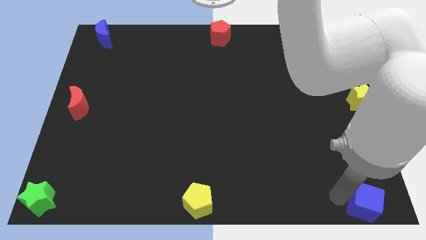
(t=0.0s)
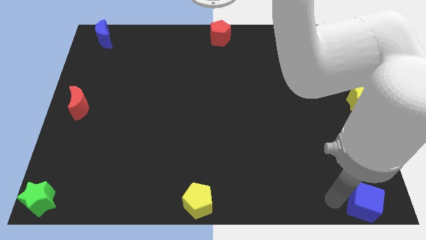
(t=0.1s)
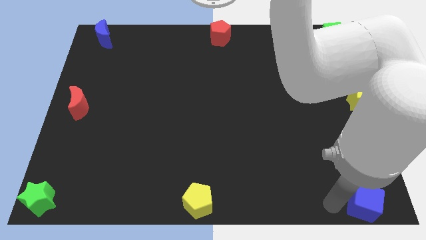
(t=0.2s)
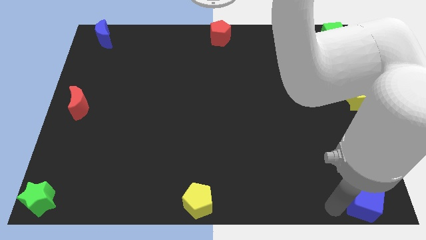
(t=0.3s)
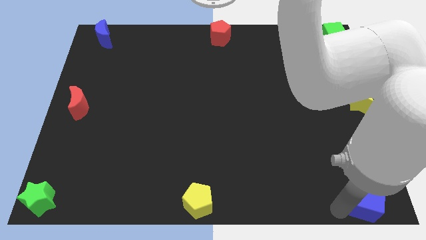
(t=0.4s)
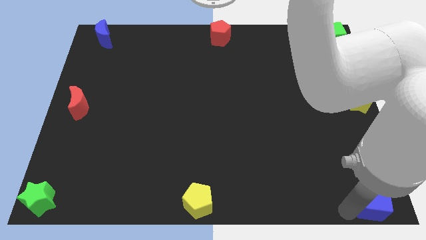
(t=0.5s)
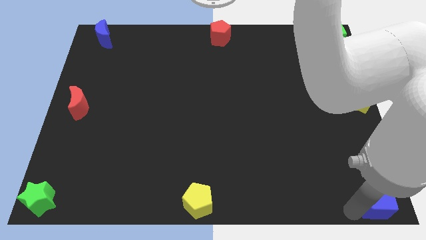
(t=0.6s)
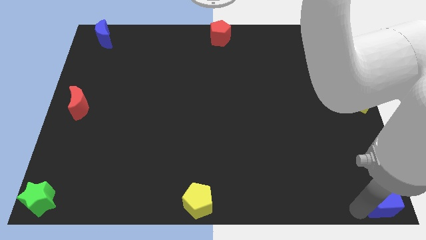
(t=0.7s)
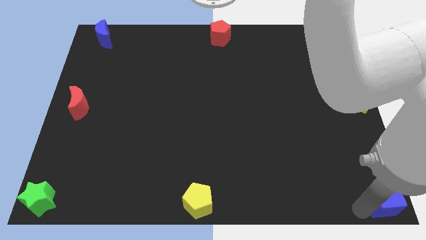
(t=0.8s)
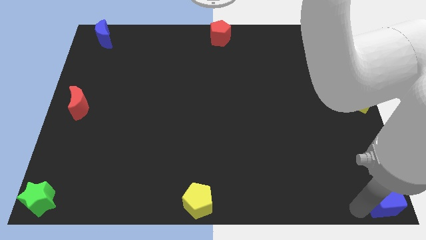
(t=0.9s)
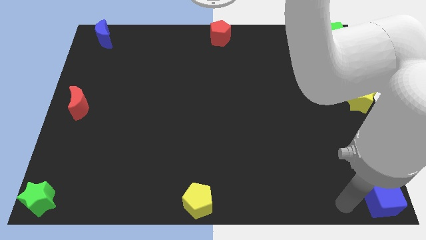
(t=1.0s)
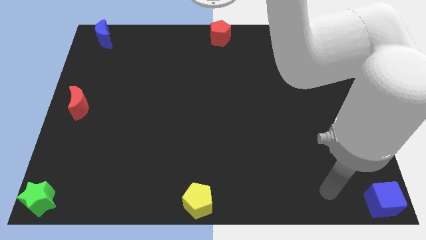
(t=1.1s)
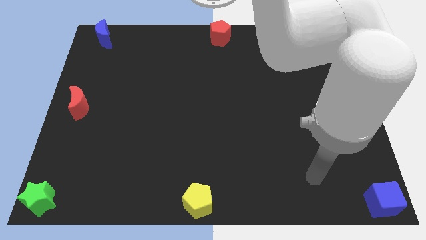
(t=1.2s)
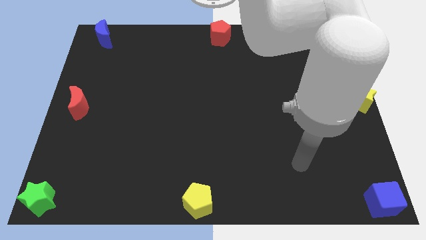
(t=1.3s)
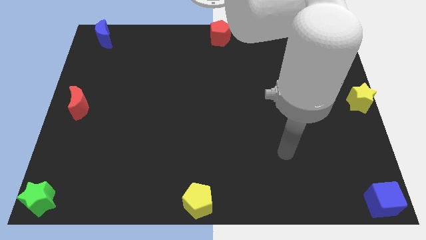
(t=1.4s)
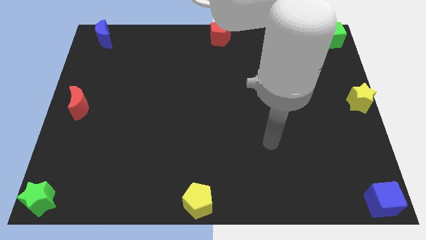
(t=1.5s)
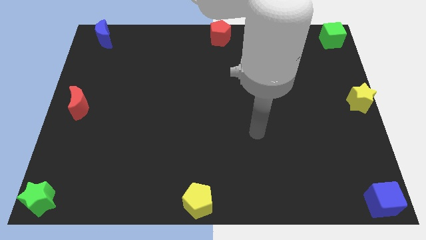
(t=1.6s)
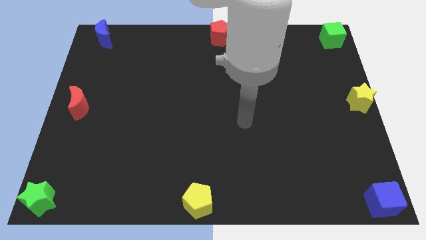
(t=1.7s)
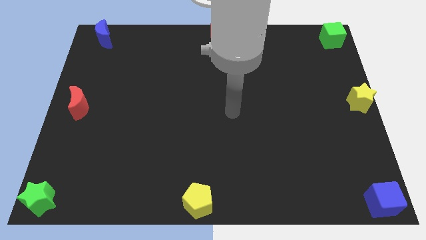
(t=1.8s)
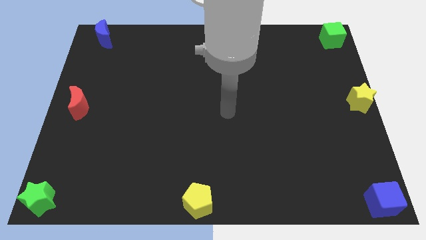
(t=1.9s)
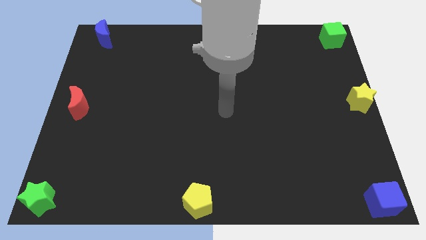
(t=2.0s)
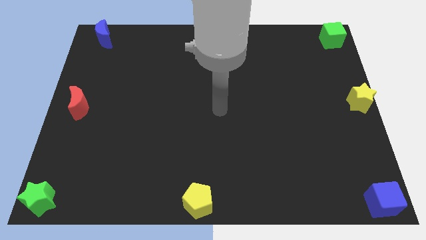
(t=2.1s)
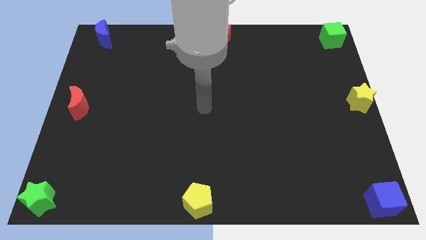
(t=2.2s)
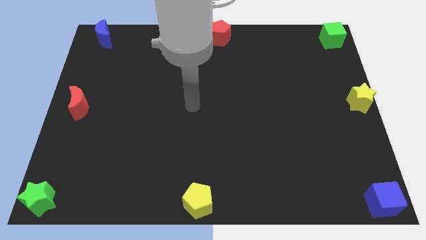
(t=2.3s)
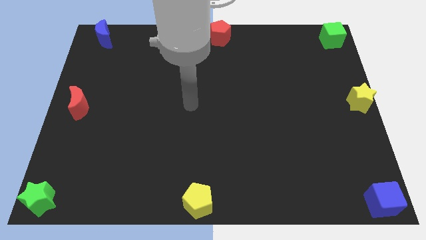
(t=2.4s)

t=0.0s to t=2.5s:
place the blue cube at the bottom right corner of the board

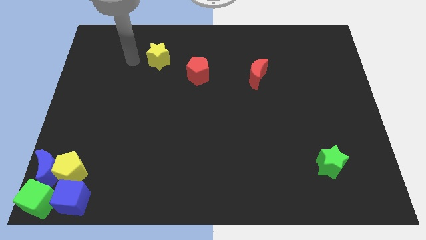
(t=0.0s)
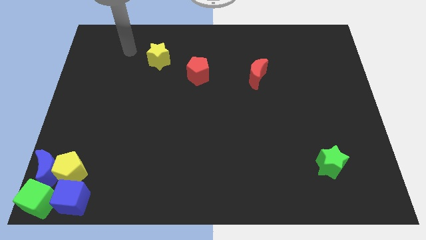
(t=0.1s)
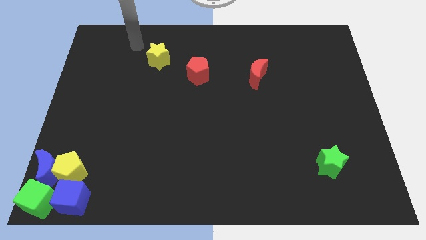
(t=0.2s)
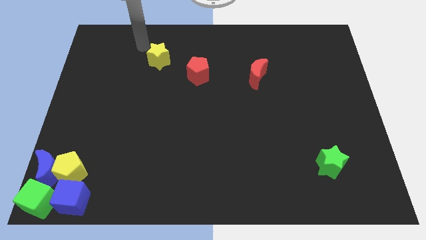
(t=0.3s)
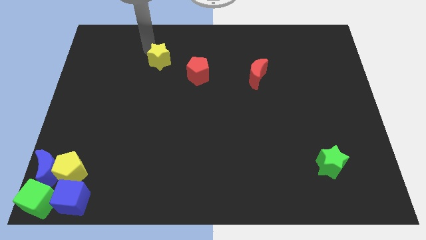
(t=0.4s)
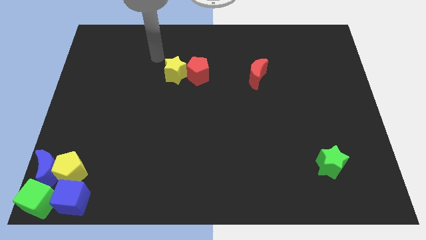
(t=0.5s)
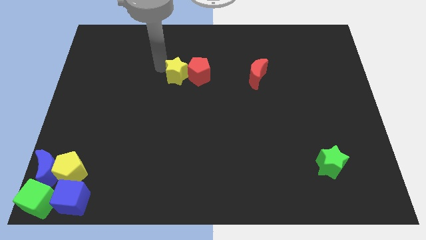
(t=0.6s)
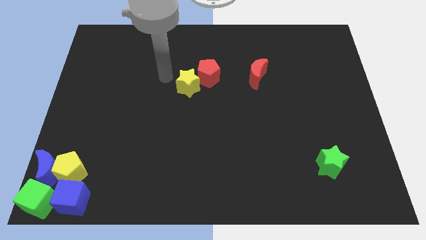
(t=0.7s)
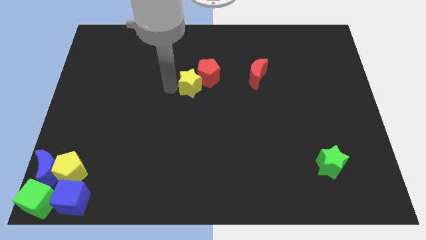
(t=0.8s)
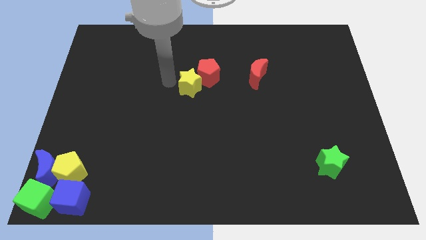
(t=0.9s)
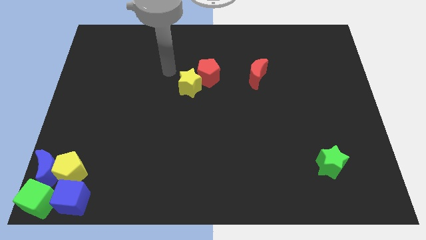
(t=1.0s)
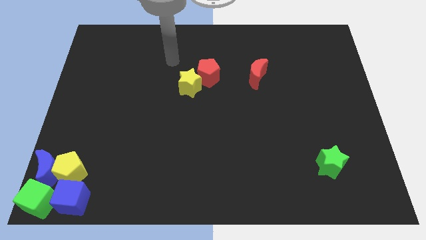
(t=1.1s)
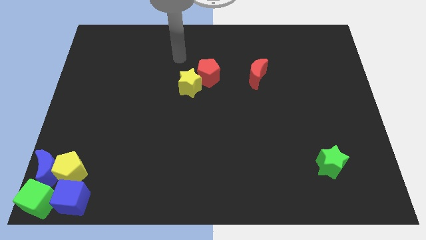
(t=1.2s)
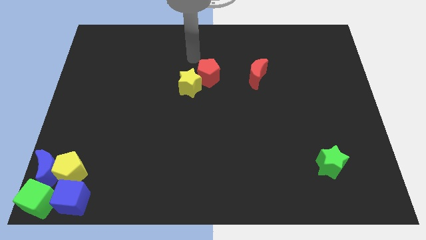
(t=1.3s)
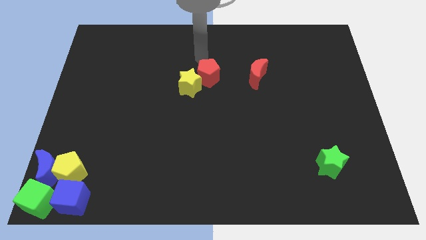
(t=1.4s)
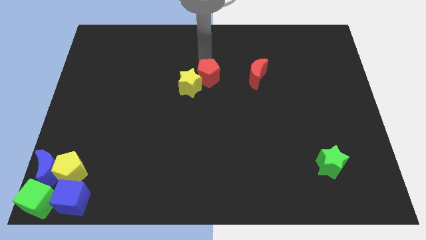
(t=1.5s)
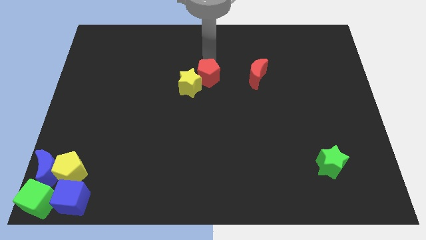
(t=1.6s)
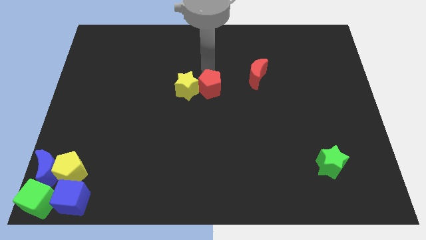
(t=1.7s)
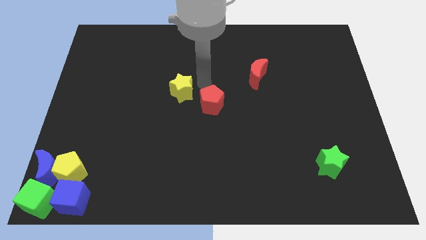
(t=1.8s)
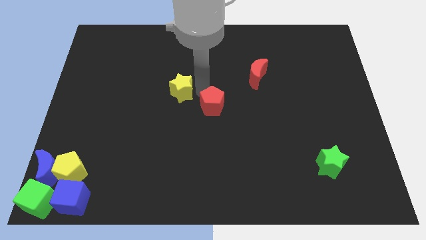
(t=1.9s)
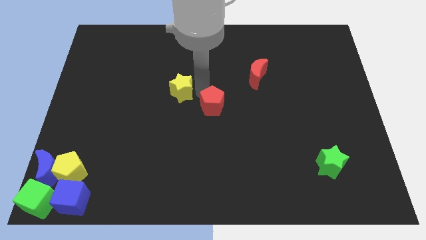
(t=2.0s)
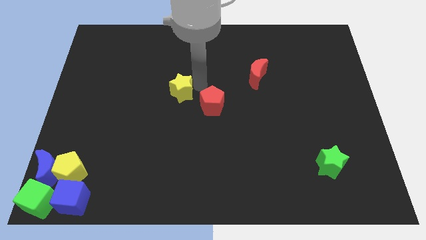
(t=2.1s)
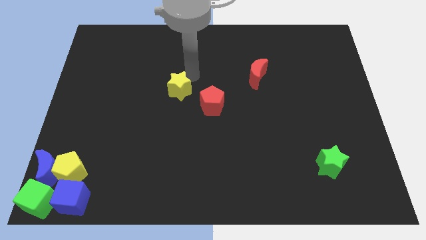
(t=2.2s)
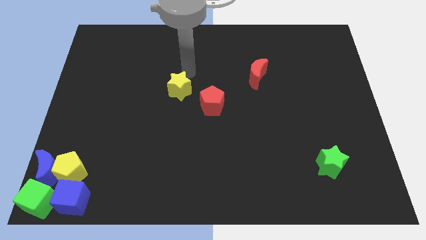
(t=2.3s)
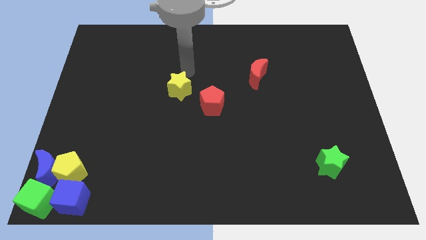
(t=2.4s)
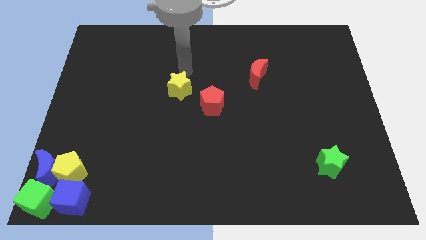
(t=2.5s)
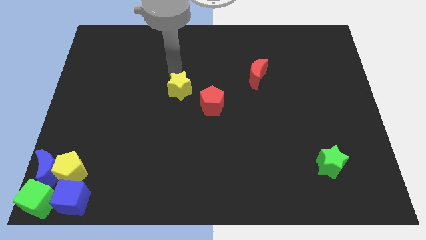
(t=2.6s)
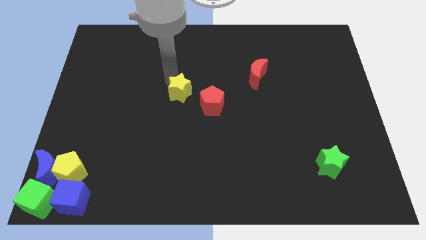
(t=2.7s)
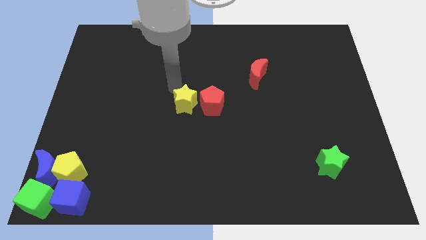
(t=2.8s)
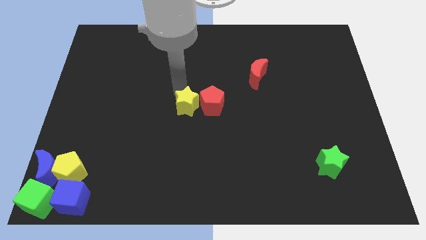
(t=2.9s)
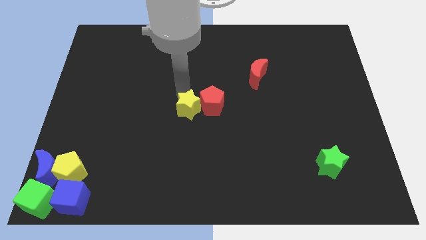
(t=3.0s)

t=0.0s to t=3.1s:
slide the yellow star to the left of the red pentagon

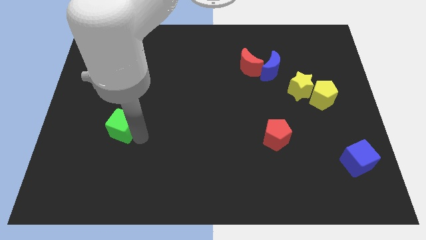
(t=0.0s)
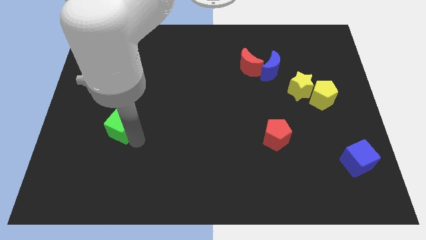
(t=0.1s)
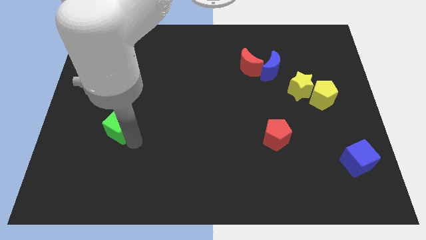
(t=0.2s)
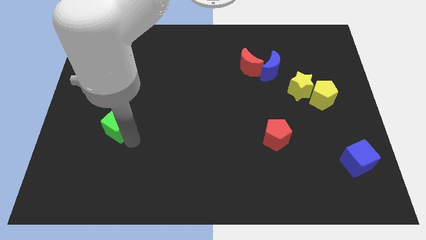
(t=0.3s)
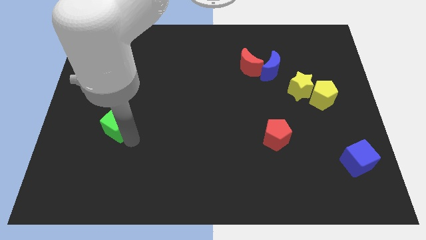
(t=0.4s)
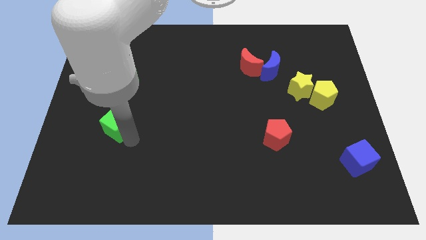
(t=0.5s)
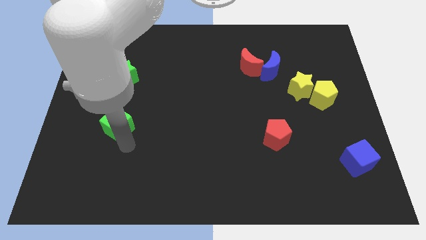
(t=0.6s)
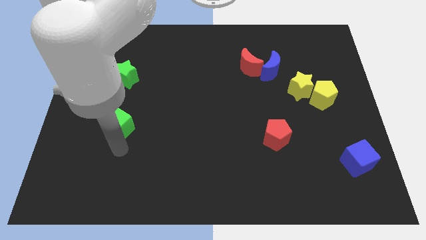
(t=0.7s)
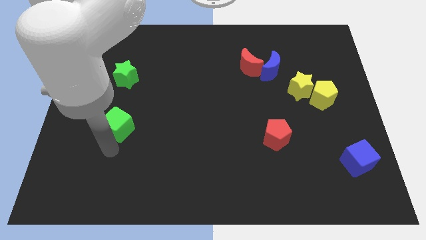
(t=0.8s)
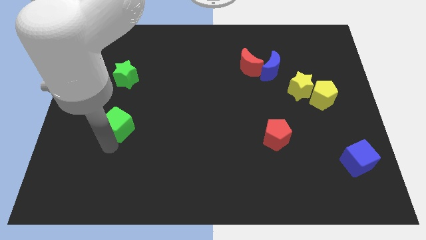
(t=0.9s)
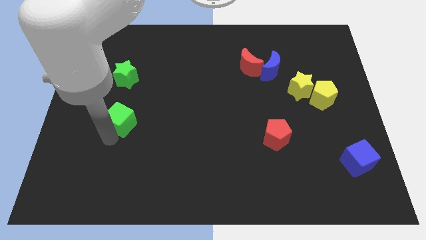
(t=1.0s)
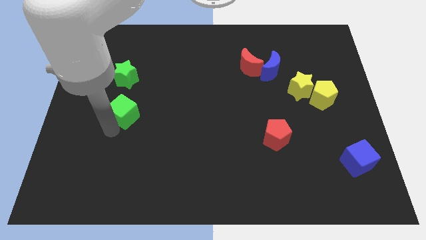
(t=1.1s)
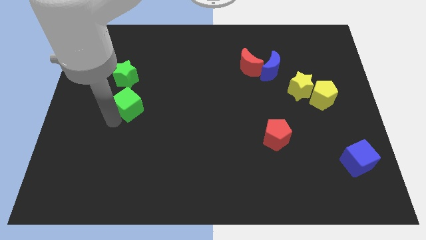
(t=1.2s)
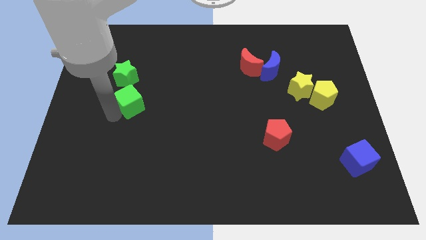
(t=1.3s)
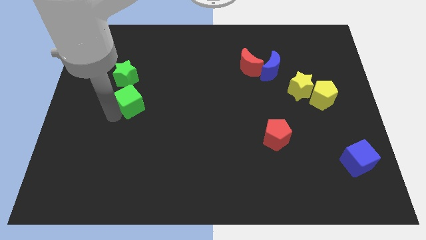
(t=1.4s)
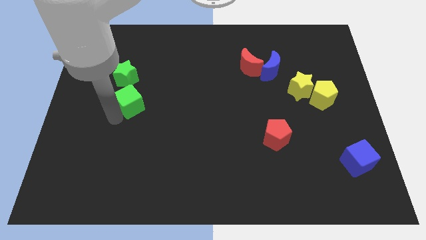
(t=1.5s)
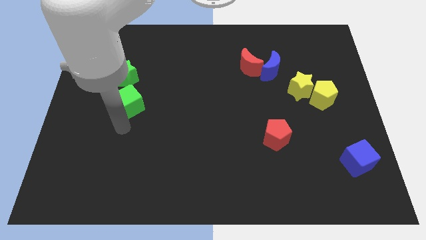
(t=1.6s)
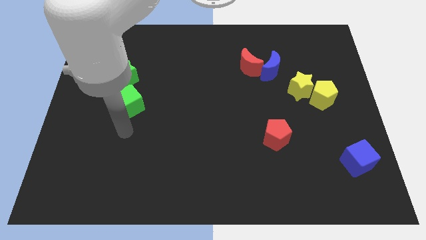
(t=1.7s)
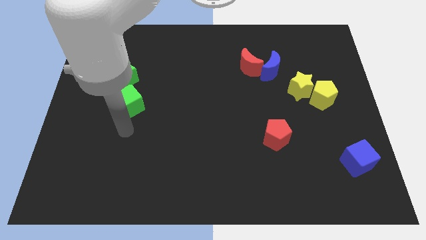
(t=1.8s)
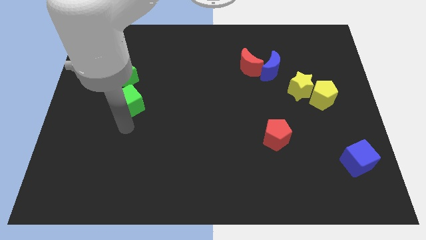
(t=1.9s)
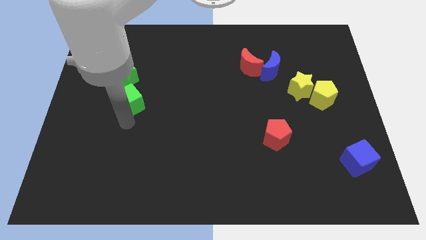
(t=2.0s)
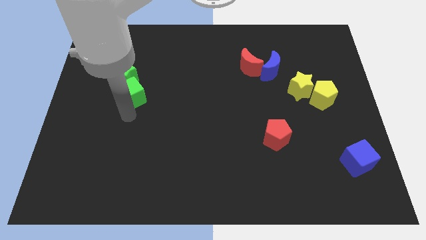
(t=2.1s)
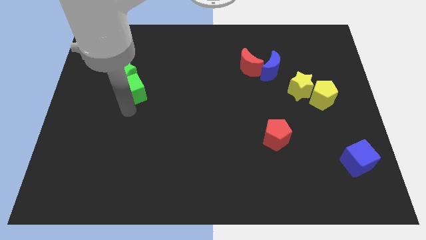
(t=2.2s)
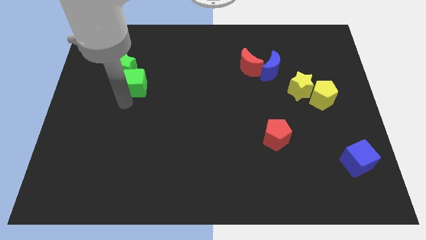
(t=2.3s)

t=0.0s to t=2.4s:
drag the green cube close to the green star

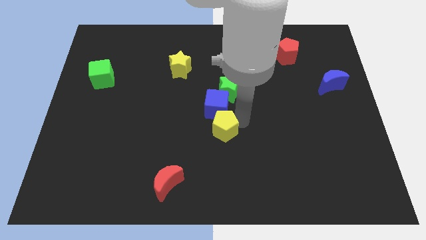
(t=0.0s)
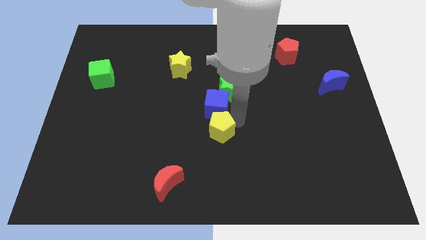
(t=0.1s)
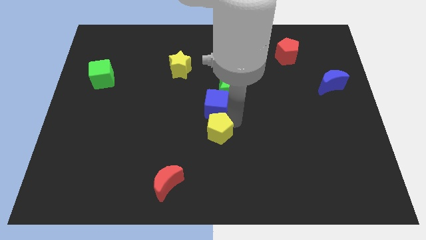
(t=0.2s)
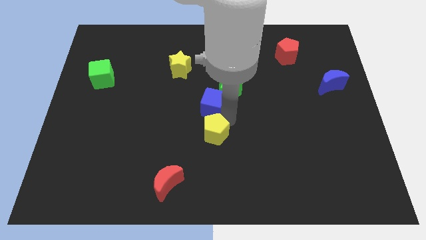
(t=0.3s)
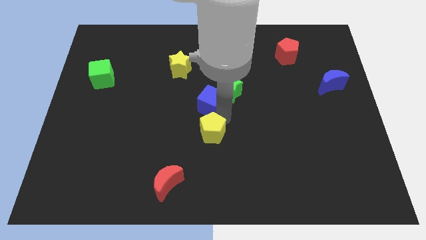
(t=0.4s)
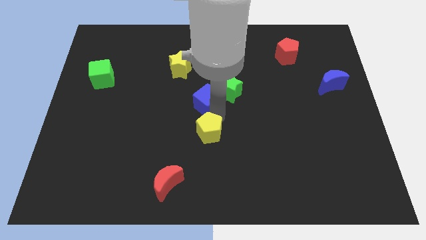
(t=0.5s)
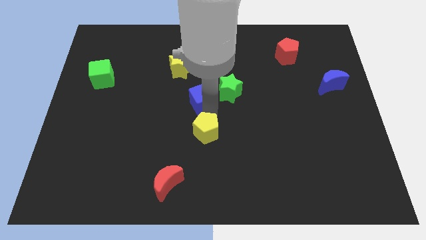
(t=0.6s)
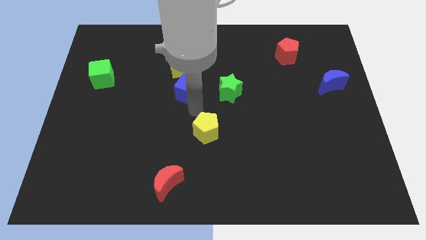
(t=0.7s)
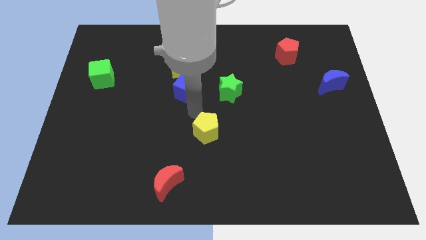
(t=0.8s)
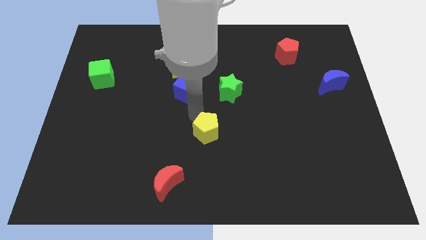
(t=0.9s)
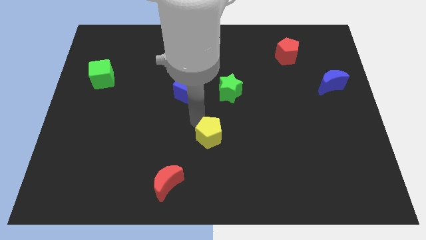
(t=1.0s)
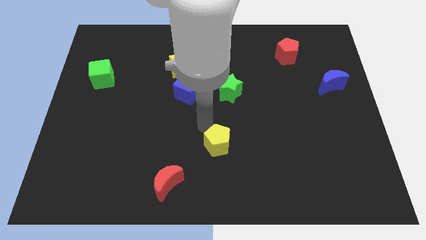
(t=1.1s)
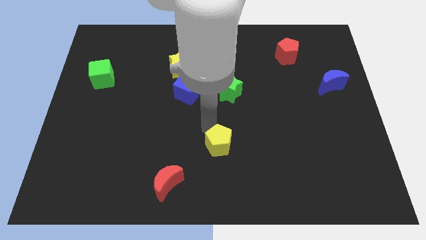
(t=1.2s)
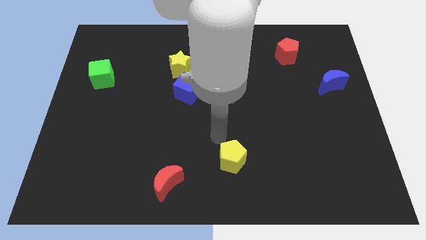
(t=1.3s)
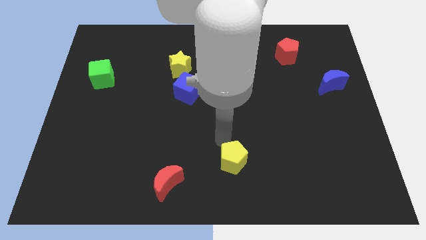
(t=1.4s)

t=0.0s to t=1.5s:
move the yellow pentagon and blue cube away from each other
